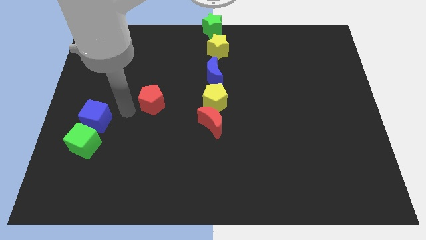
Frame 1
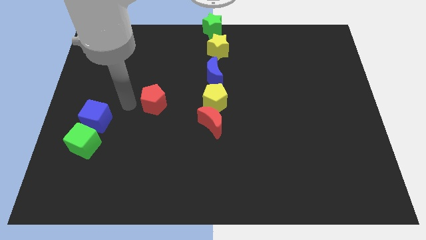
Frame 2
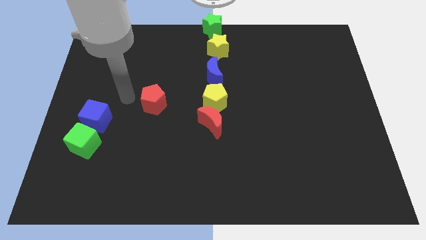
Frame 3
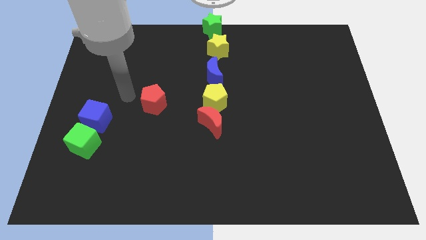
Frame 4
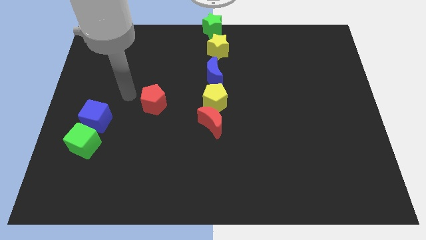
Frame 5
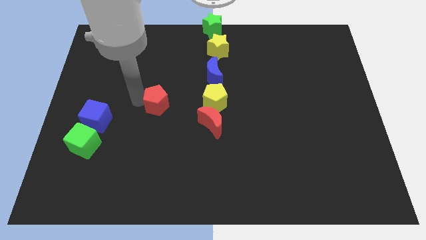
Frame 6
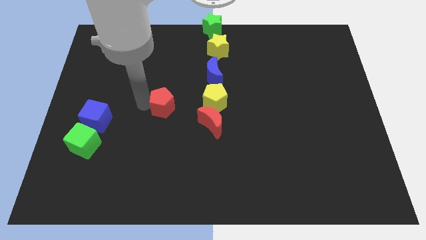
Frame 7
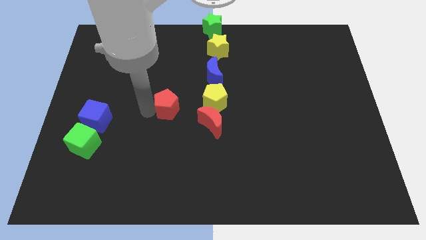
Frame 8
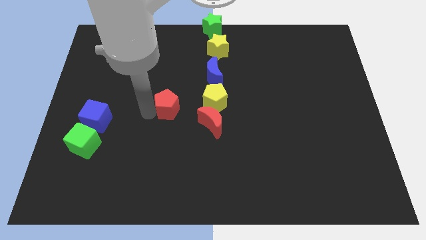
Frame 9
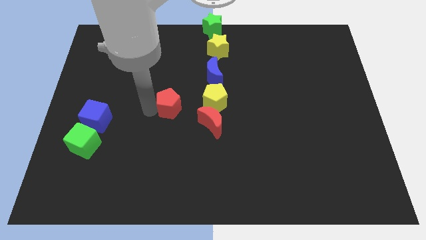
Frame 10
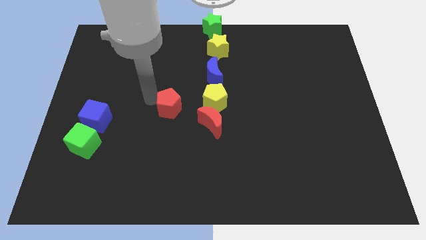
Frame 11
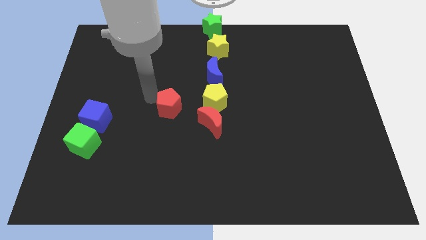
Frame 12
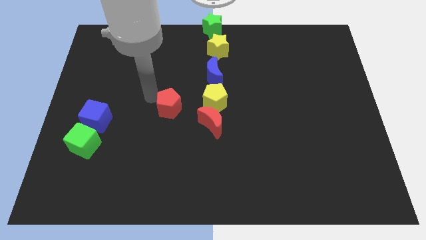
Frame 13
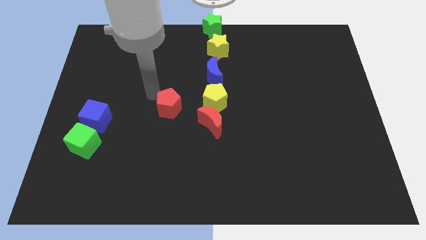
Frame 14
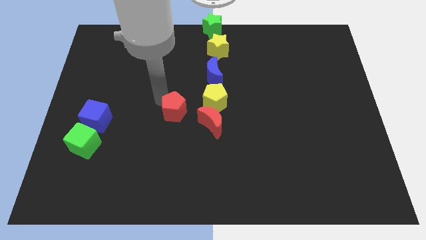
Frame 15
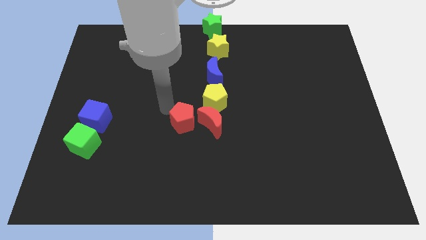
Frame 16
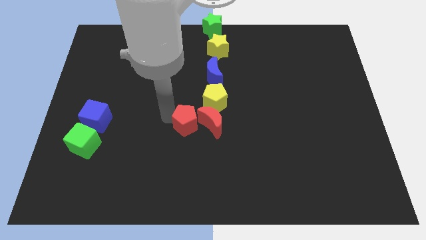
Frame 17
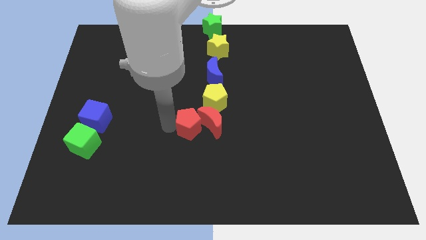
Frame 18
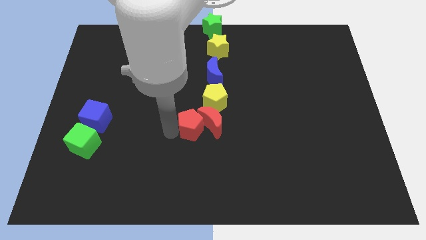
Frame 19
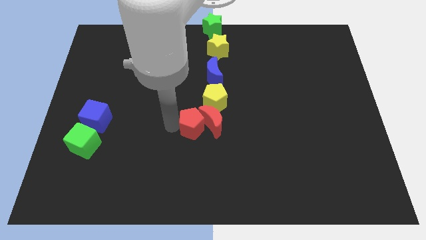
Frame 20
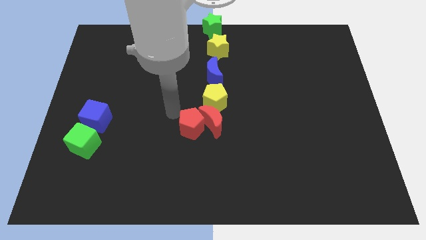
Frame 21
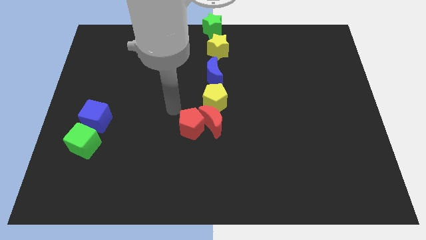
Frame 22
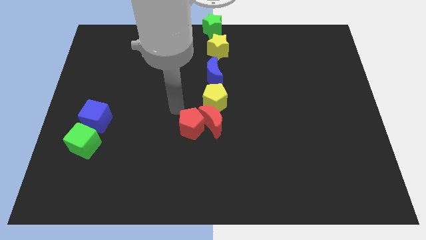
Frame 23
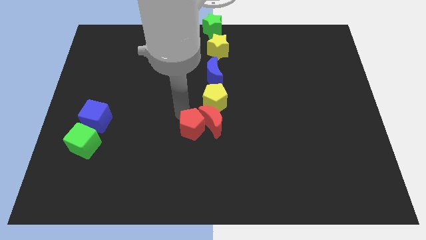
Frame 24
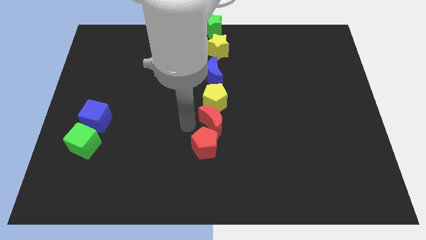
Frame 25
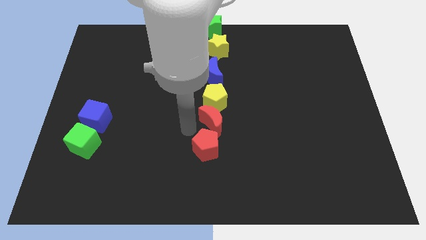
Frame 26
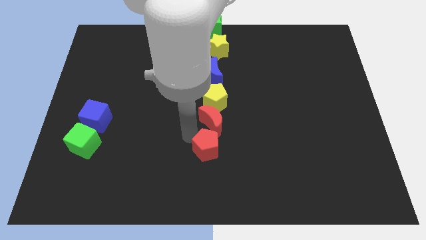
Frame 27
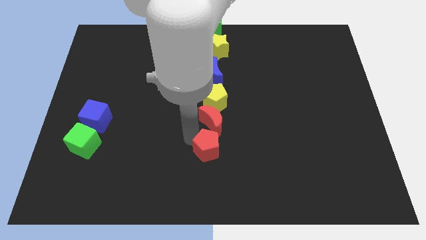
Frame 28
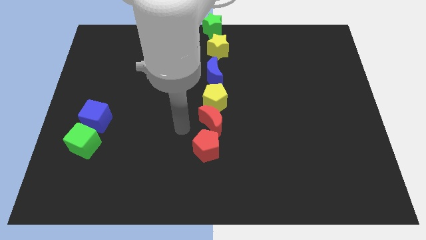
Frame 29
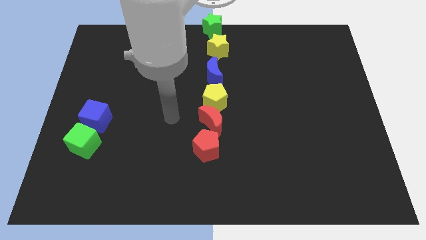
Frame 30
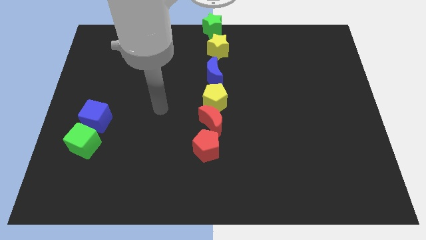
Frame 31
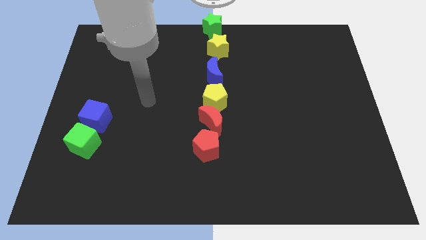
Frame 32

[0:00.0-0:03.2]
place the red pentagon at the bottom of red moon to form a vertical line

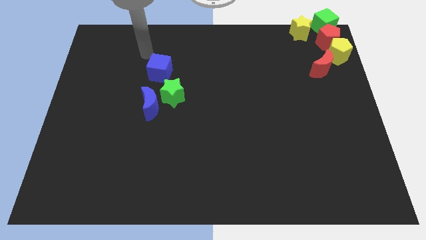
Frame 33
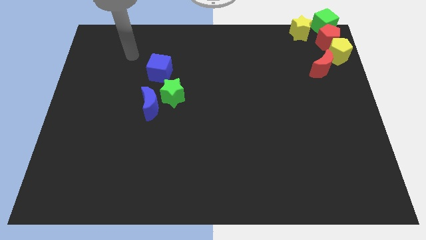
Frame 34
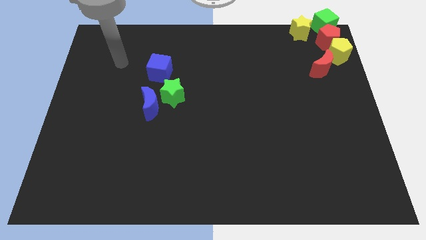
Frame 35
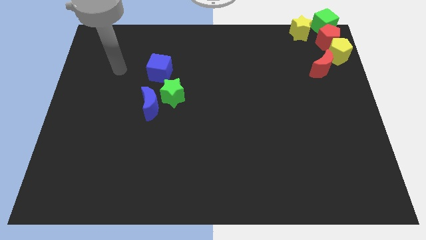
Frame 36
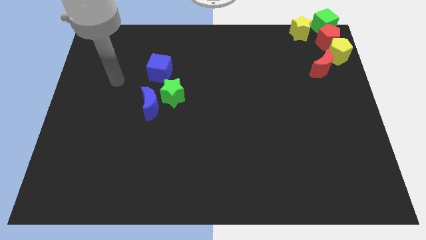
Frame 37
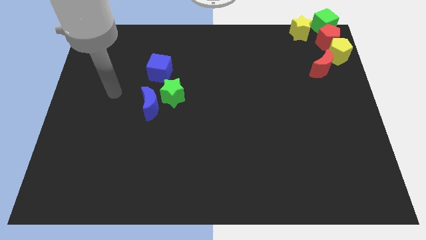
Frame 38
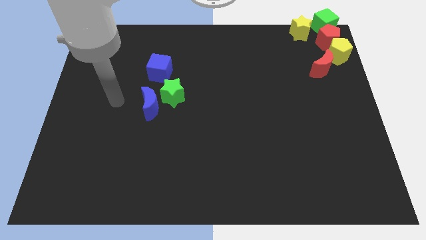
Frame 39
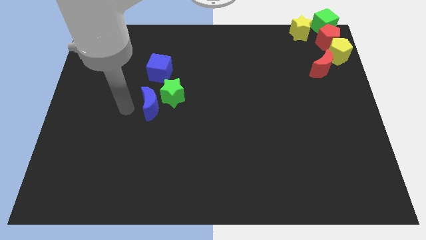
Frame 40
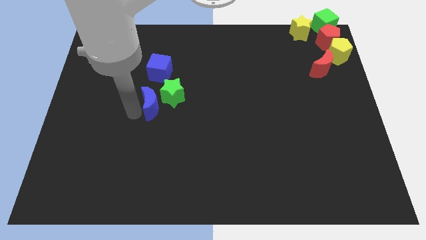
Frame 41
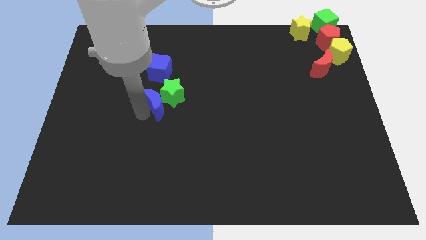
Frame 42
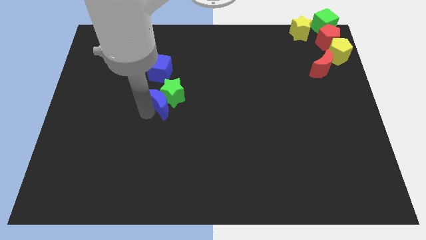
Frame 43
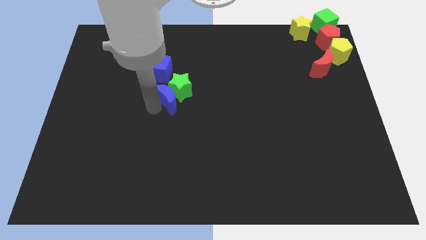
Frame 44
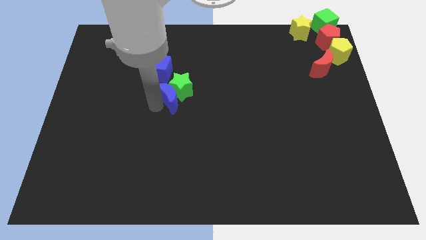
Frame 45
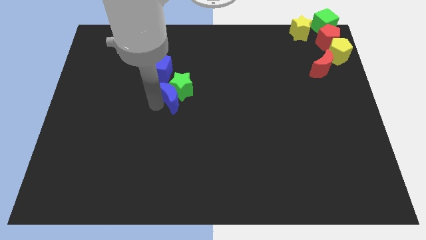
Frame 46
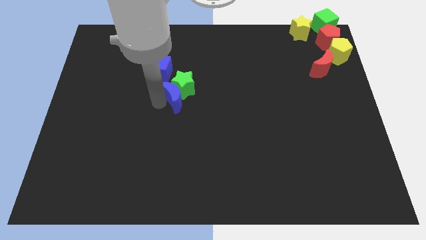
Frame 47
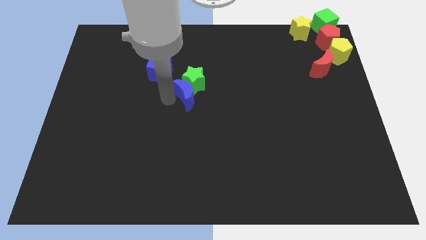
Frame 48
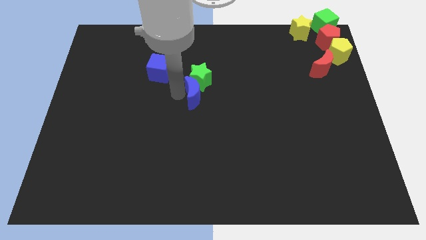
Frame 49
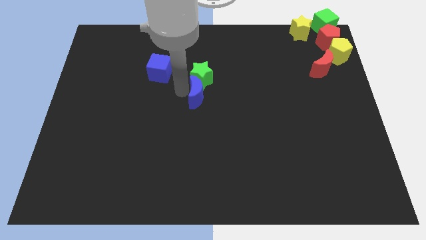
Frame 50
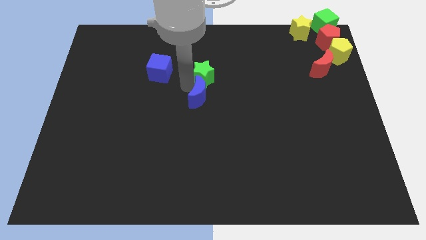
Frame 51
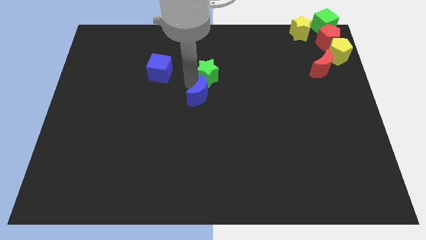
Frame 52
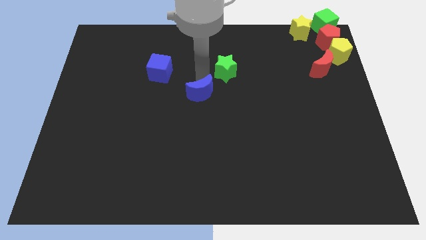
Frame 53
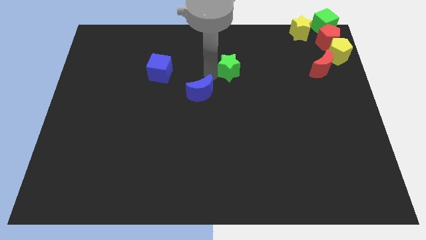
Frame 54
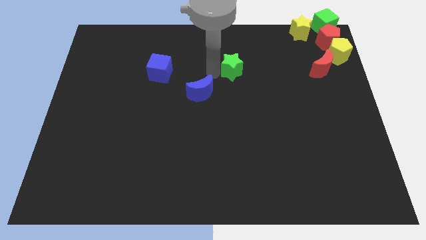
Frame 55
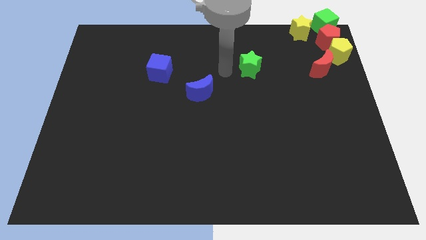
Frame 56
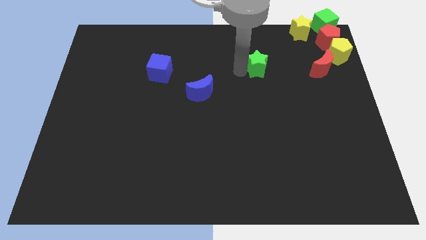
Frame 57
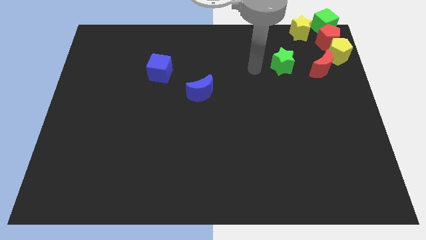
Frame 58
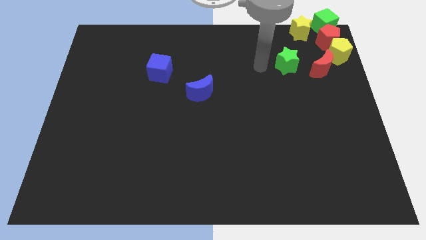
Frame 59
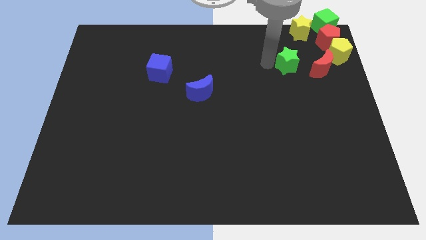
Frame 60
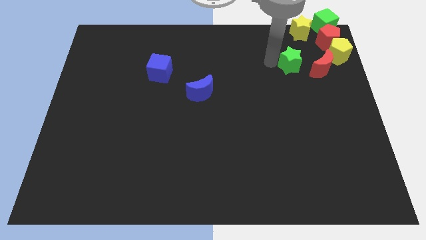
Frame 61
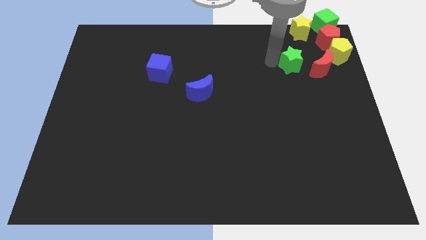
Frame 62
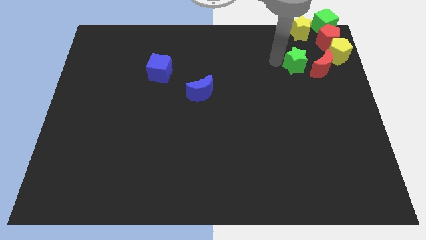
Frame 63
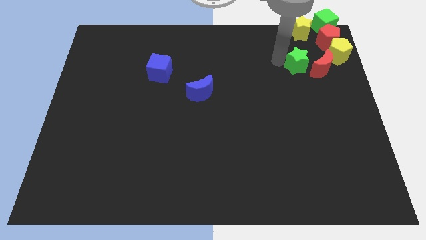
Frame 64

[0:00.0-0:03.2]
push the green star closer to the red moon

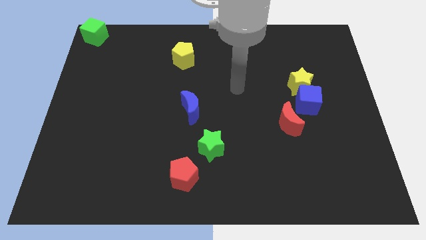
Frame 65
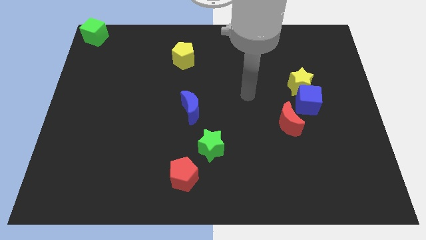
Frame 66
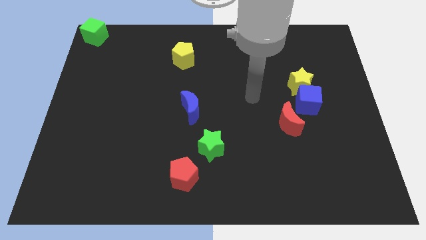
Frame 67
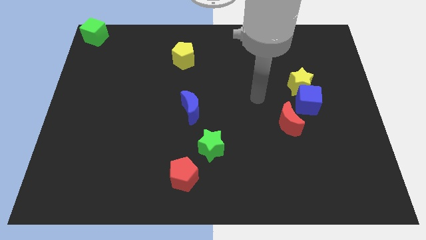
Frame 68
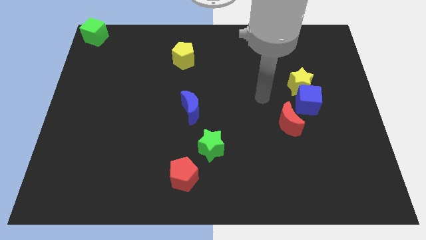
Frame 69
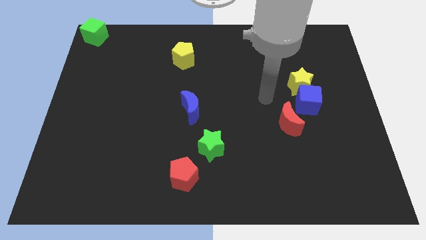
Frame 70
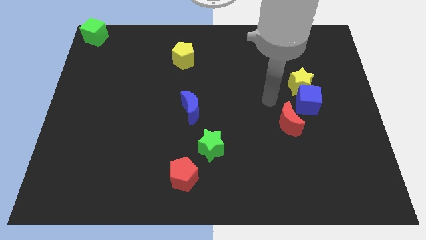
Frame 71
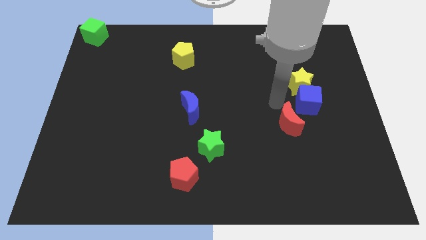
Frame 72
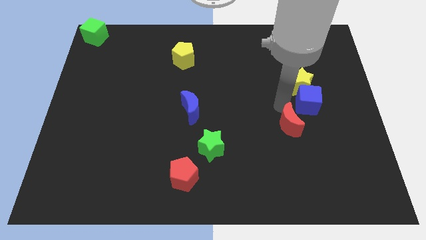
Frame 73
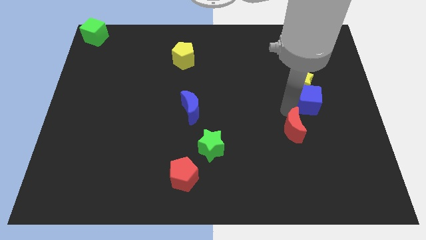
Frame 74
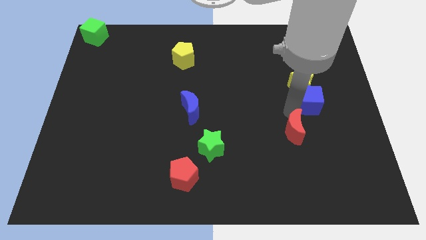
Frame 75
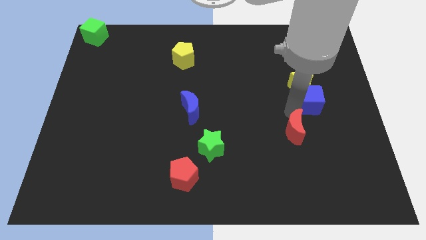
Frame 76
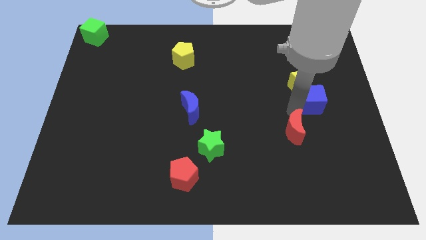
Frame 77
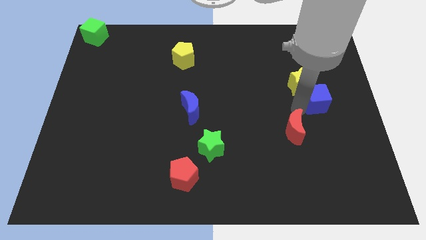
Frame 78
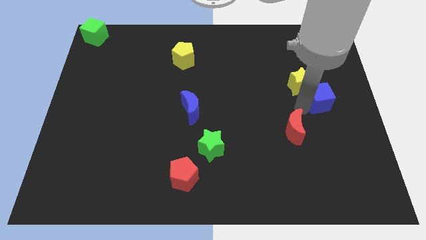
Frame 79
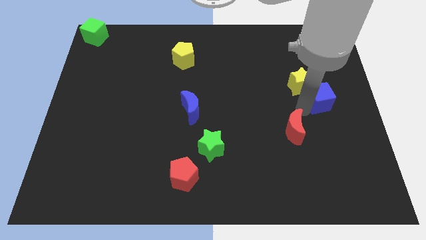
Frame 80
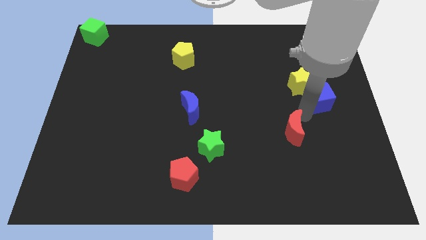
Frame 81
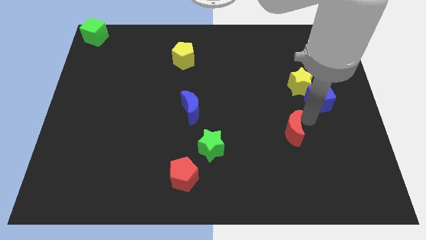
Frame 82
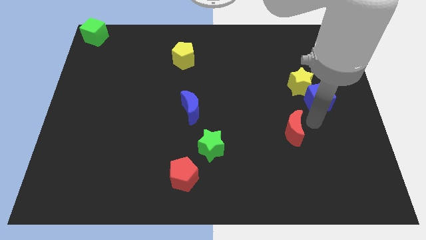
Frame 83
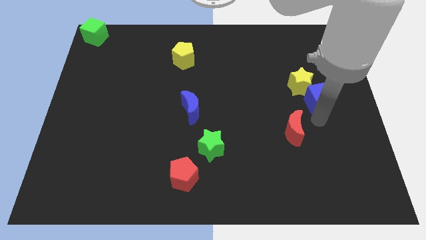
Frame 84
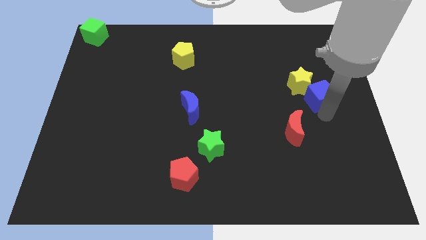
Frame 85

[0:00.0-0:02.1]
separate blue cube from yellow star

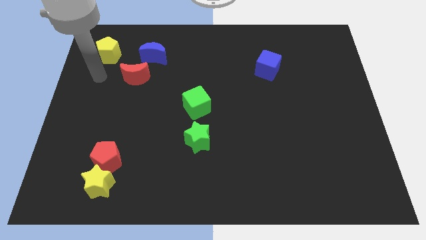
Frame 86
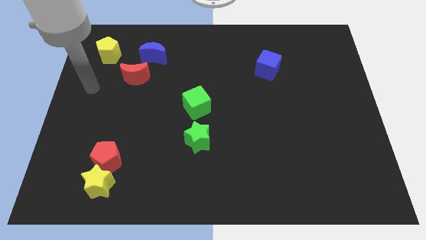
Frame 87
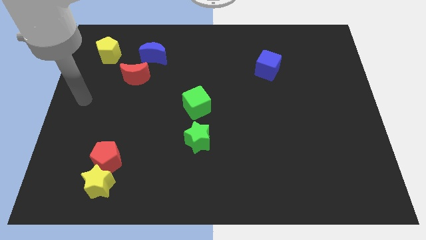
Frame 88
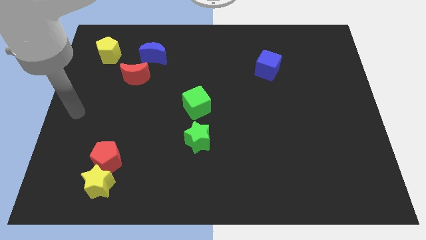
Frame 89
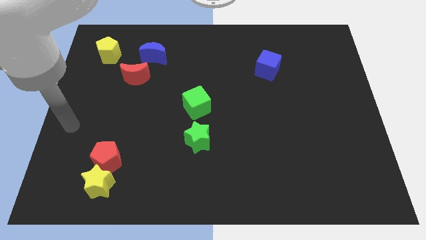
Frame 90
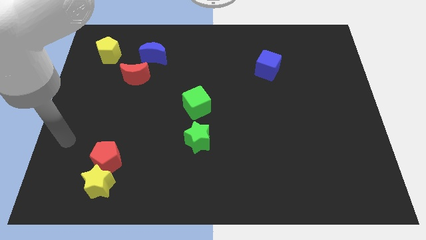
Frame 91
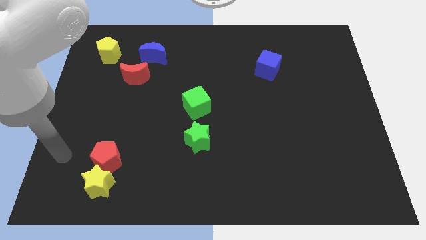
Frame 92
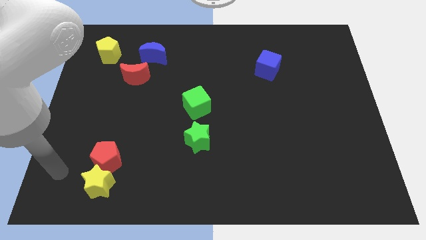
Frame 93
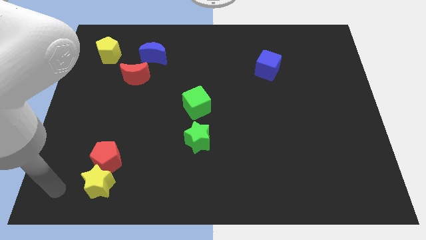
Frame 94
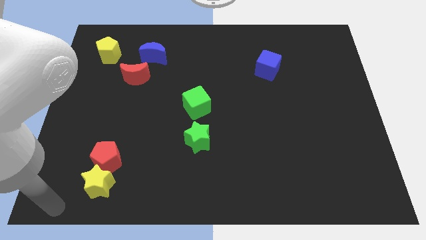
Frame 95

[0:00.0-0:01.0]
move your arm to the bottom left corner of the board
